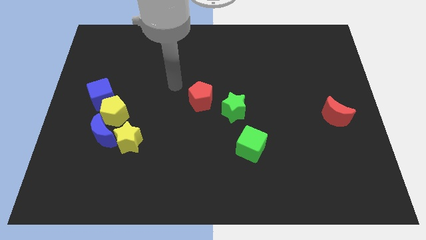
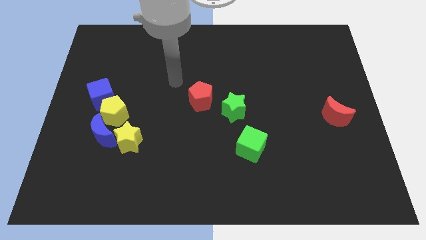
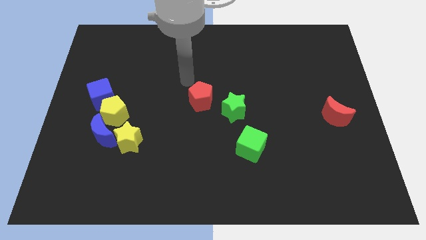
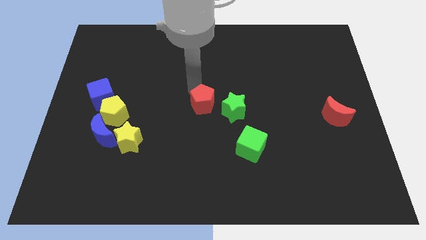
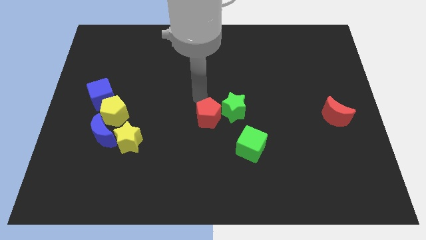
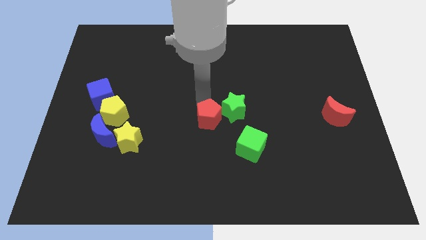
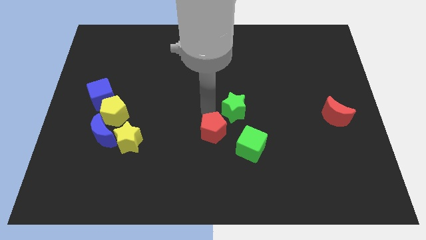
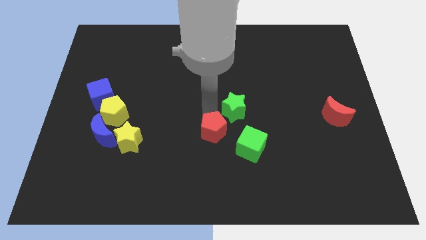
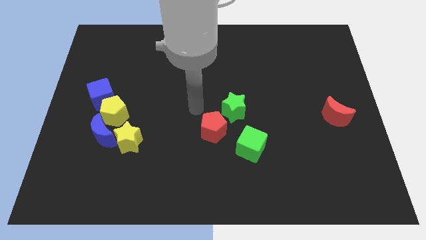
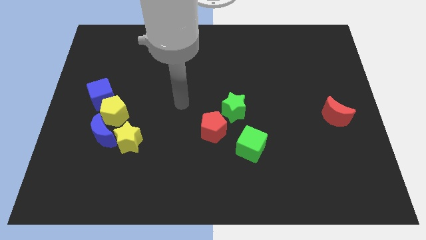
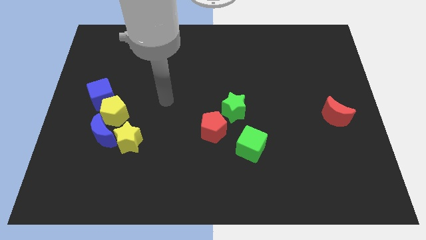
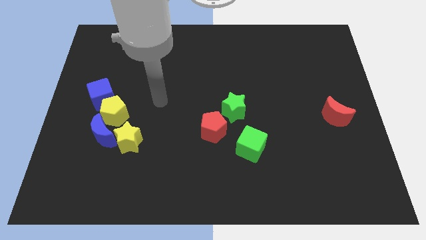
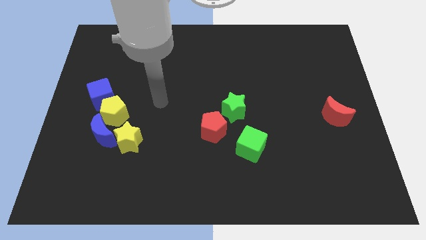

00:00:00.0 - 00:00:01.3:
move the red pentagon to the bottom left of the green star

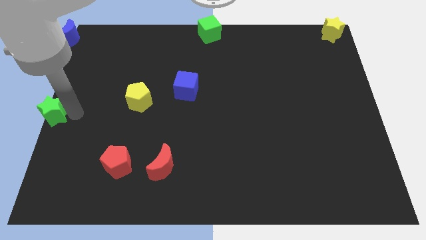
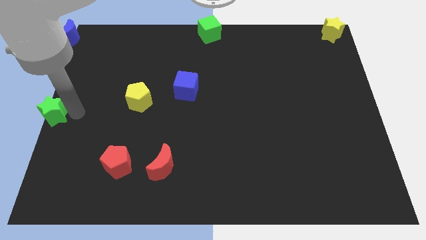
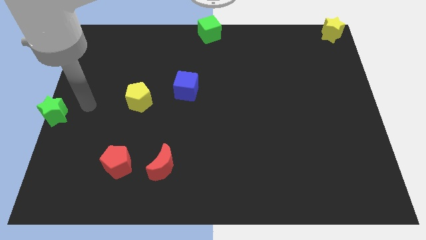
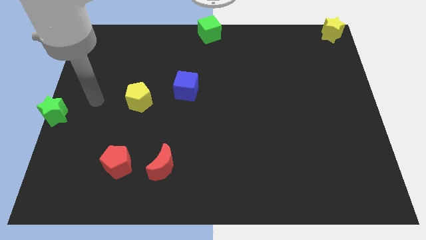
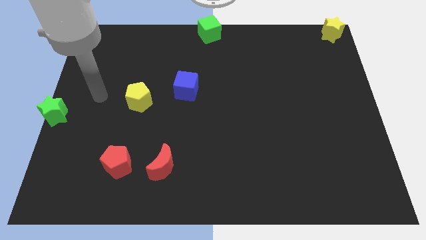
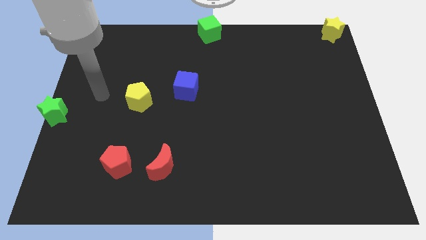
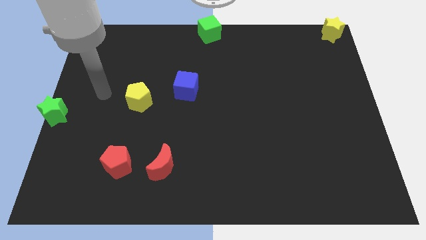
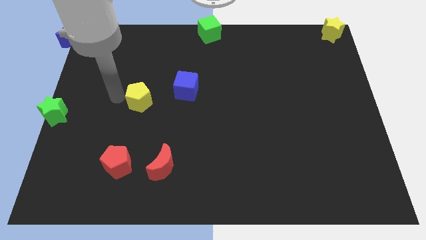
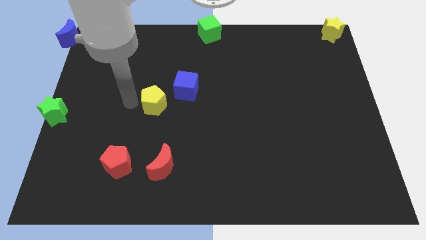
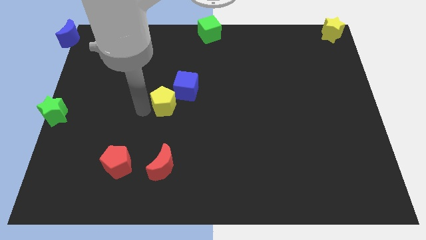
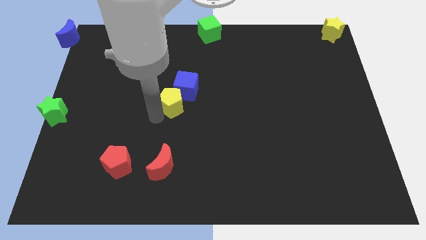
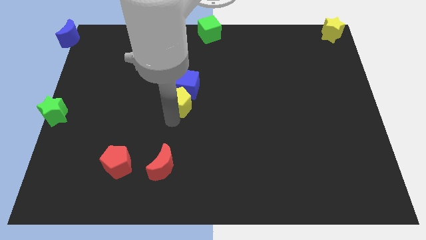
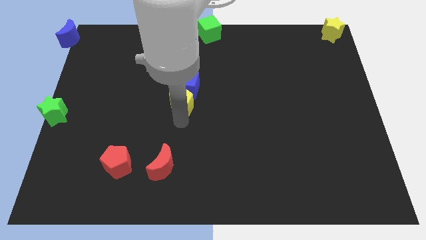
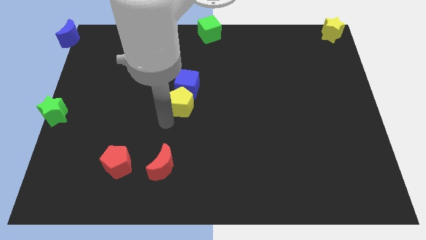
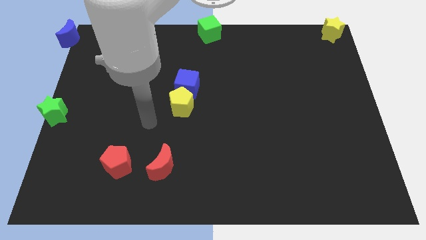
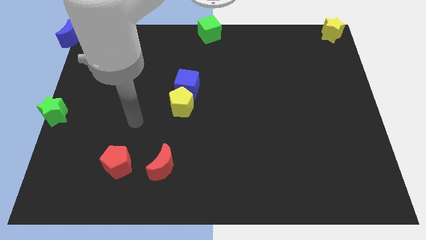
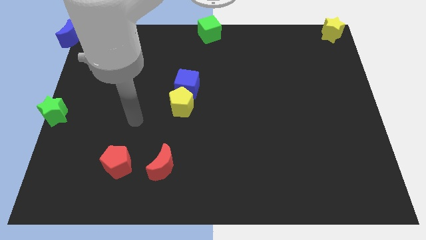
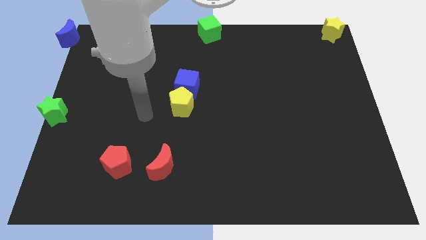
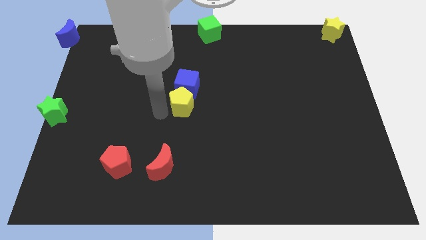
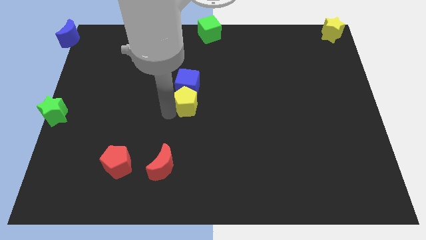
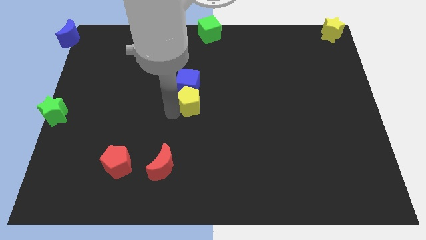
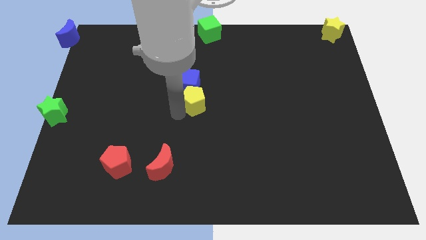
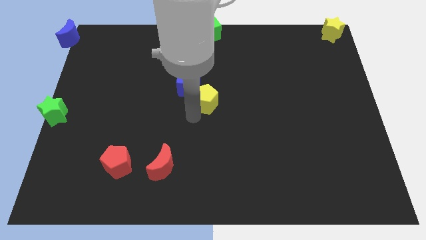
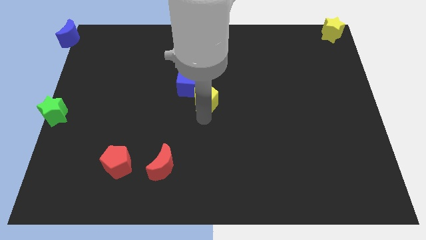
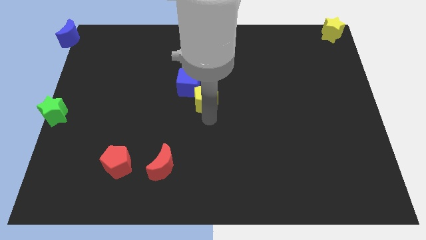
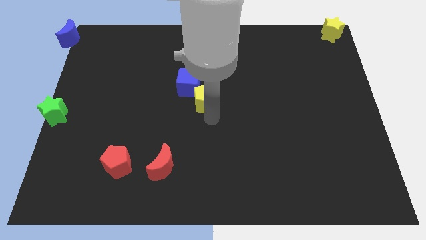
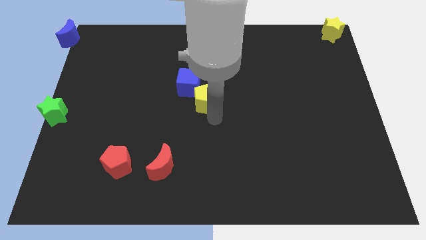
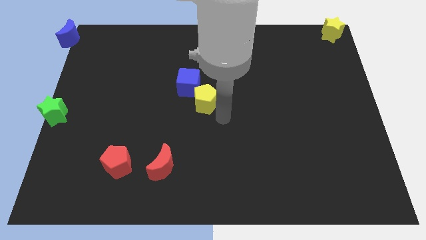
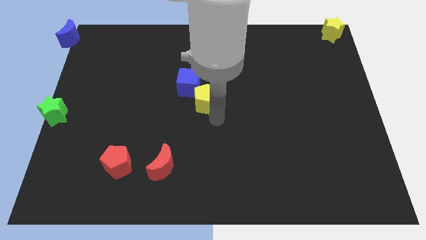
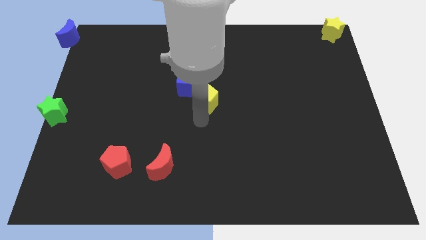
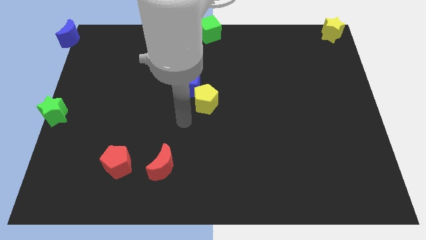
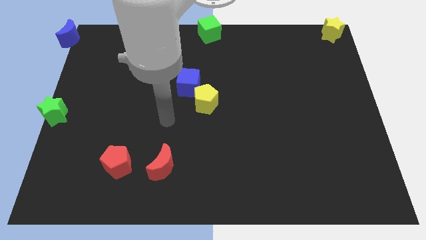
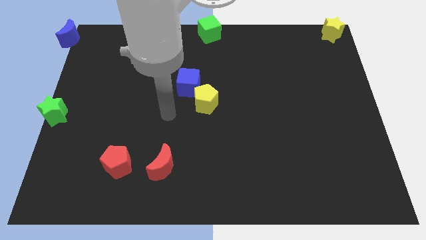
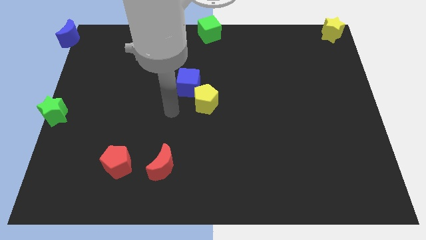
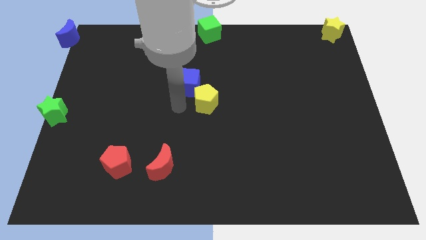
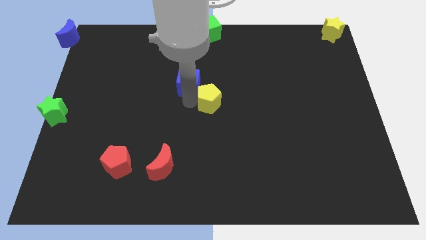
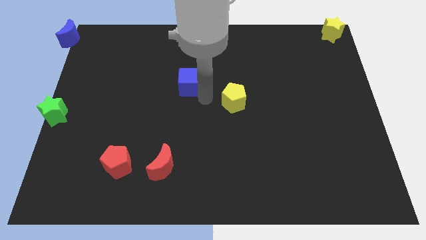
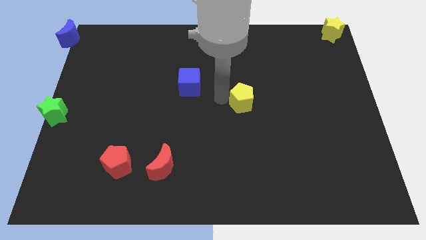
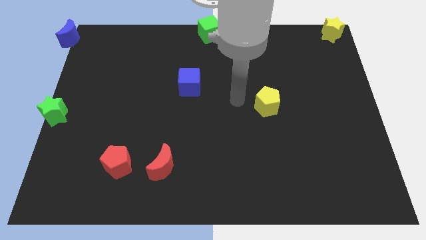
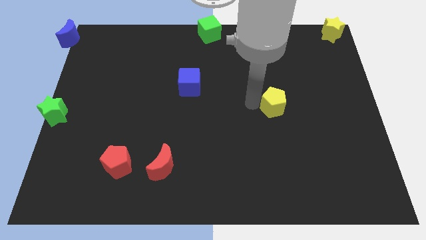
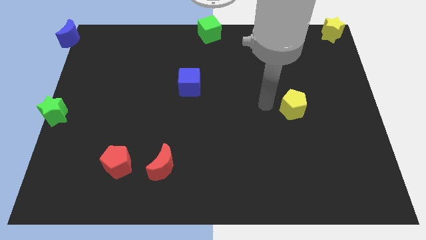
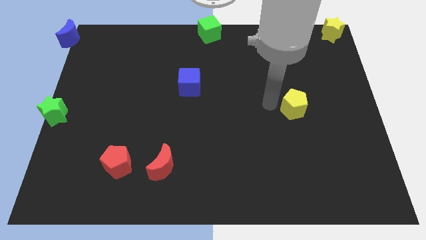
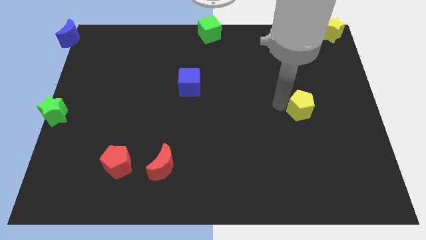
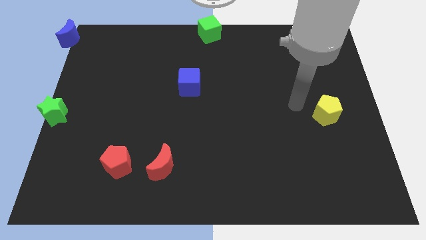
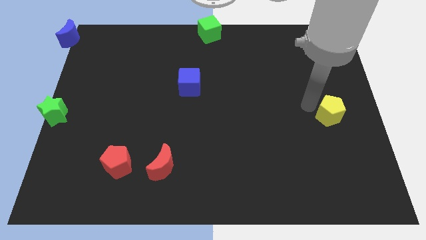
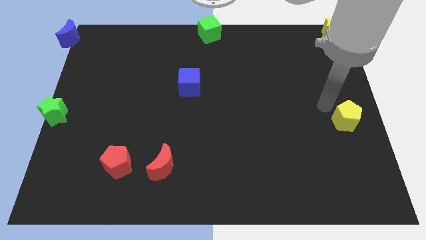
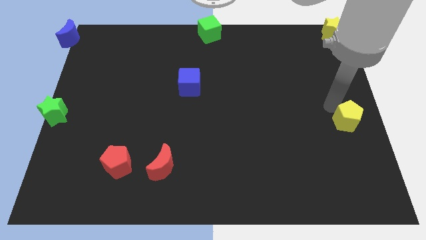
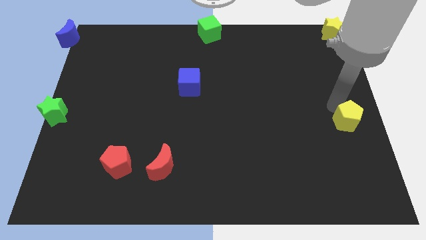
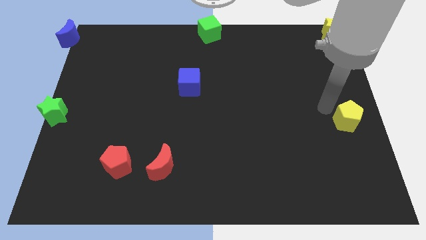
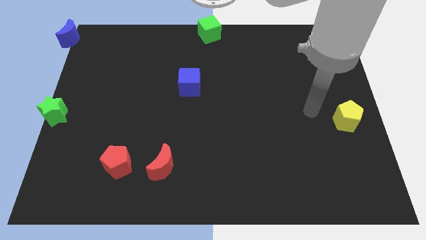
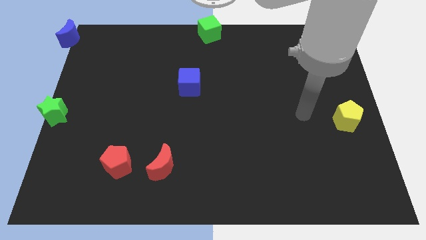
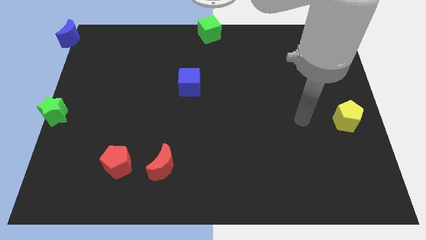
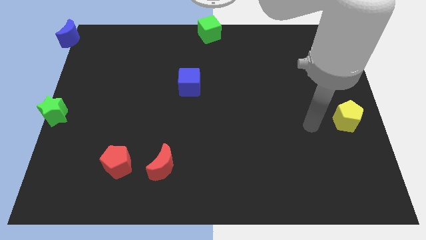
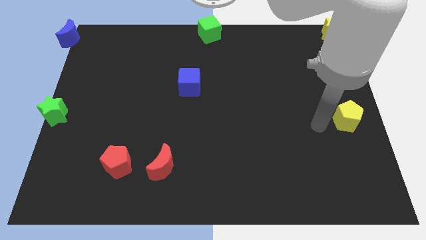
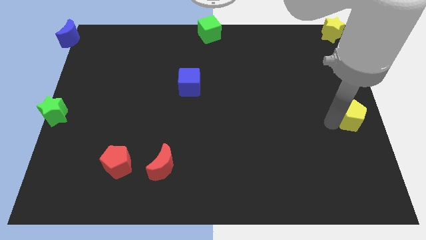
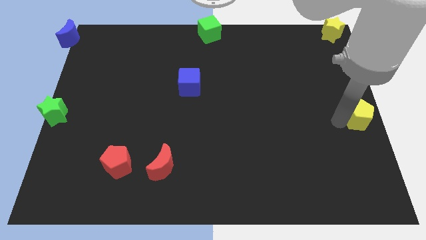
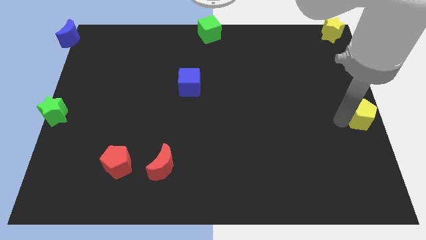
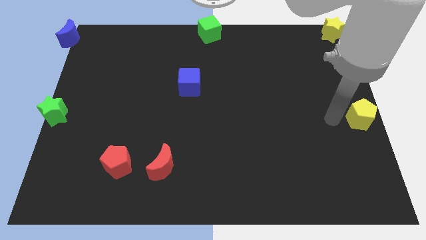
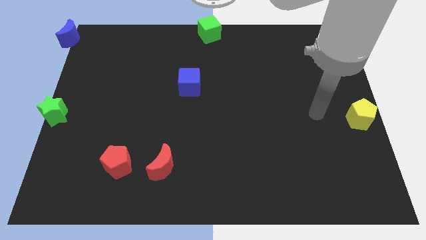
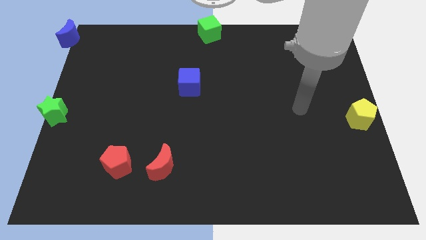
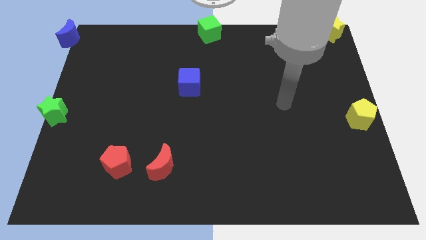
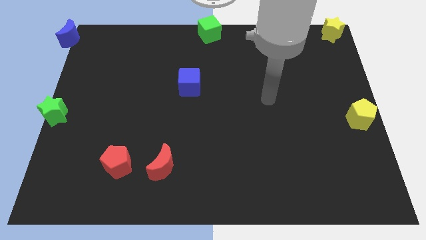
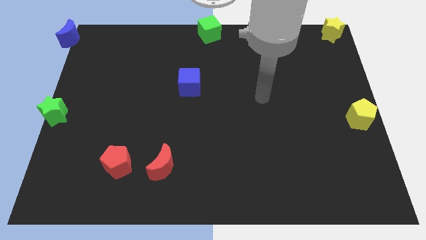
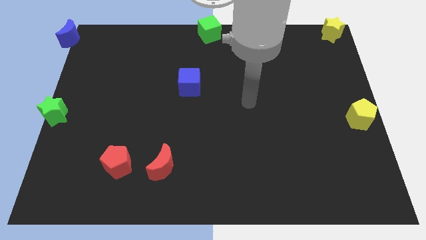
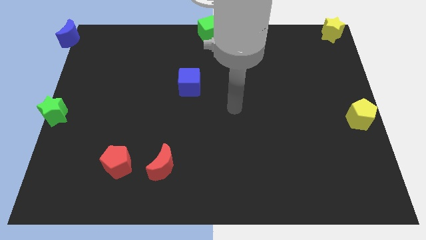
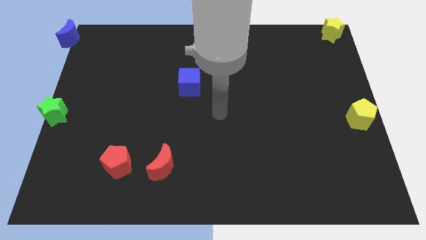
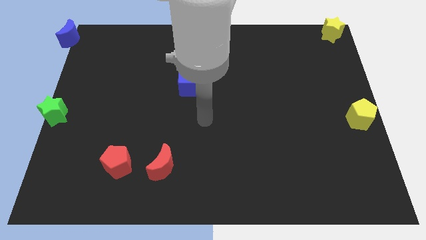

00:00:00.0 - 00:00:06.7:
place yellow pentagon below yellow star

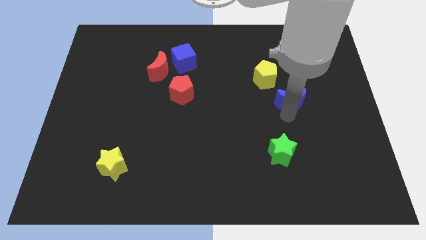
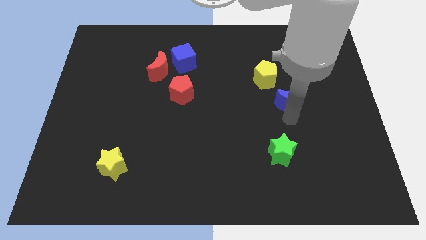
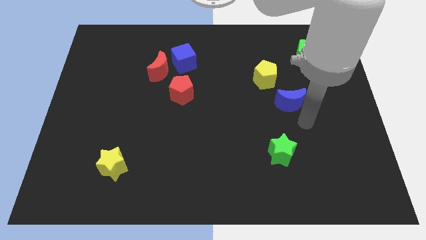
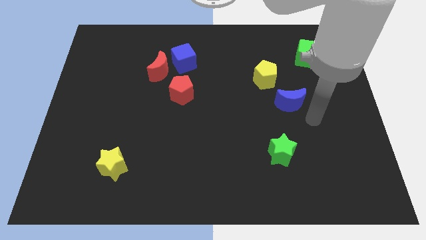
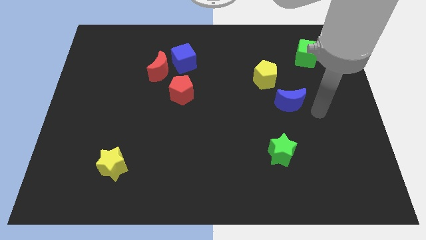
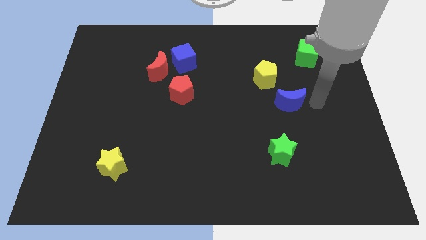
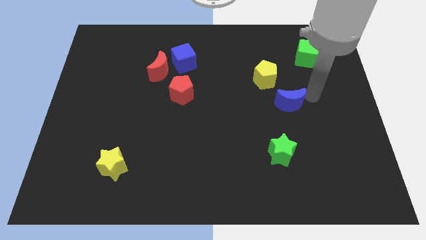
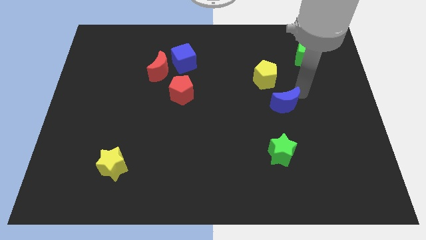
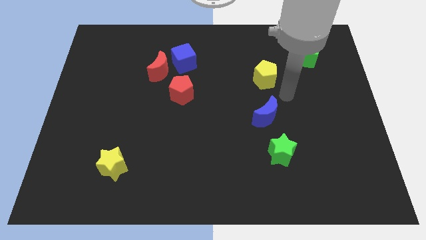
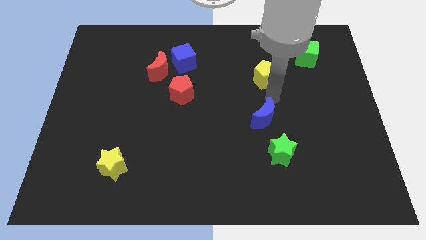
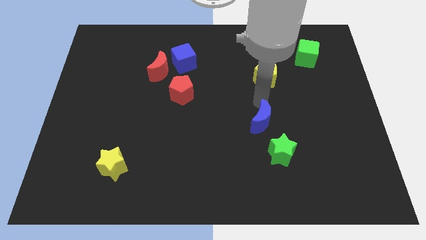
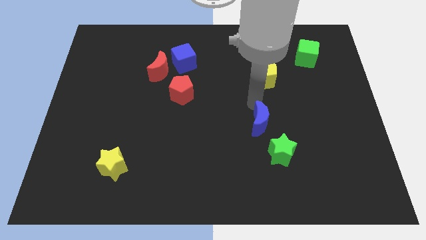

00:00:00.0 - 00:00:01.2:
slide the blue moon below the yellow pentagon
